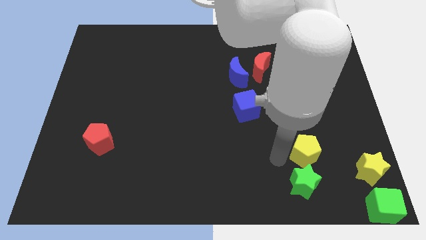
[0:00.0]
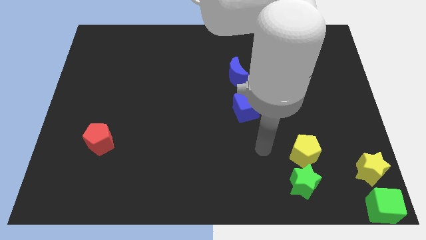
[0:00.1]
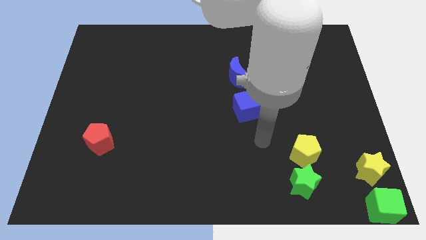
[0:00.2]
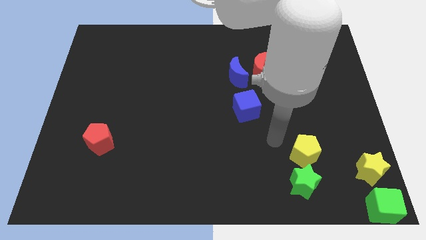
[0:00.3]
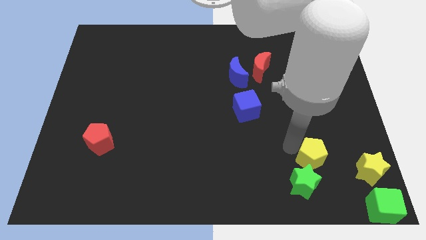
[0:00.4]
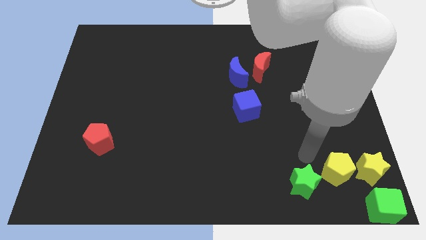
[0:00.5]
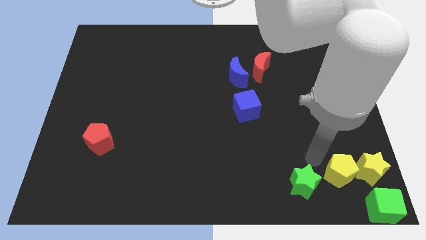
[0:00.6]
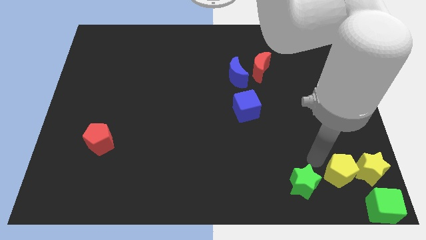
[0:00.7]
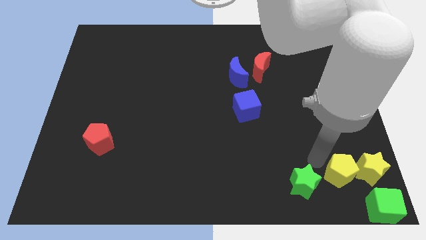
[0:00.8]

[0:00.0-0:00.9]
place the yellow pentagon towards the left side of the board

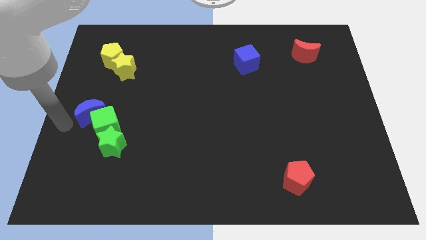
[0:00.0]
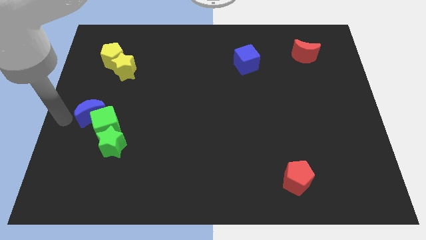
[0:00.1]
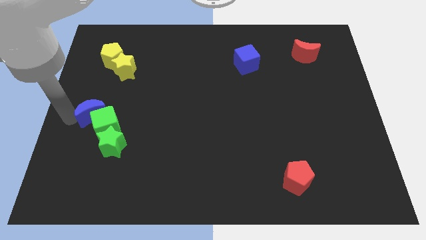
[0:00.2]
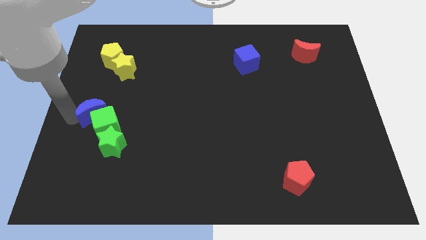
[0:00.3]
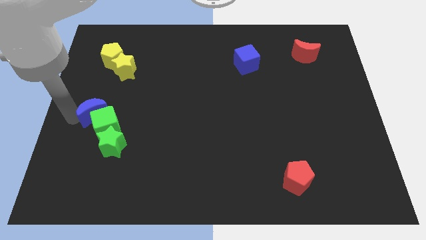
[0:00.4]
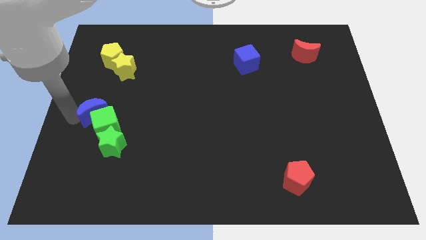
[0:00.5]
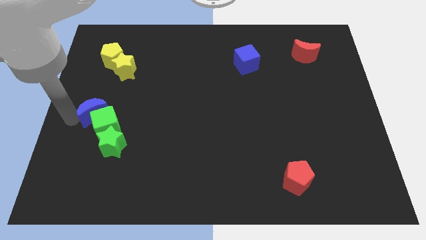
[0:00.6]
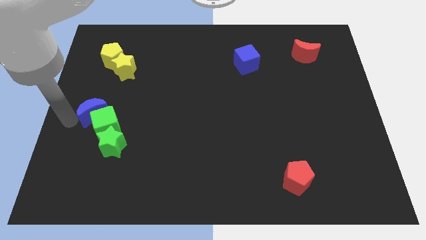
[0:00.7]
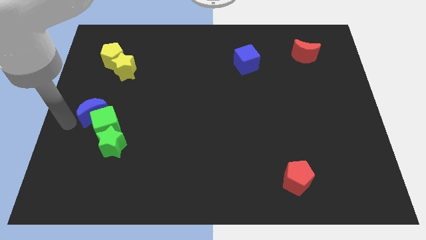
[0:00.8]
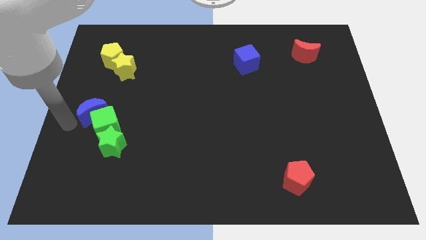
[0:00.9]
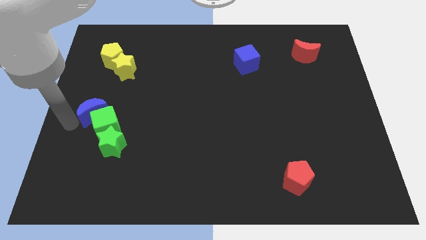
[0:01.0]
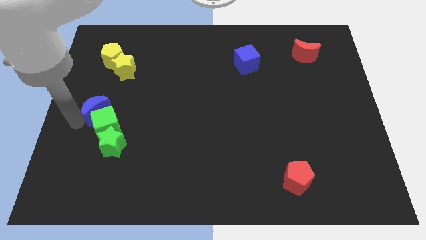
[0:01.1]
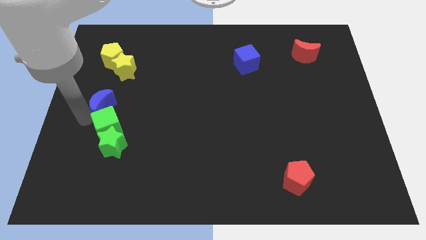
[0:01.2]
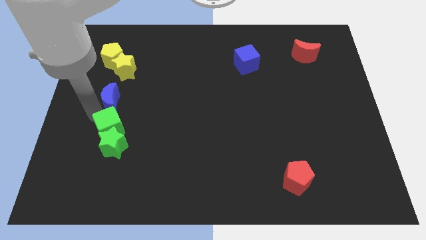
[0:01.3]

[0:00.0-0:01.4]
place blue moon to the top of the green cube

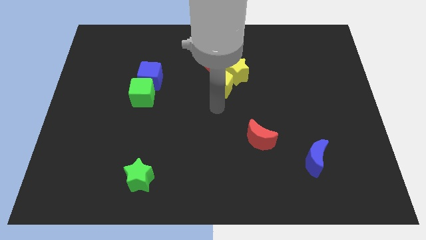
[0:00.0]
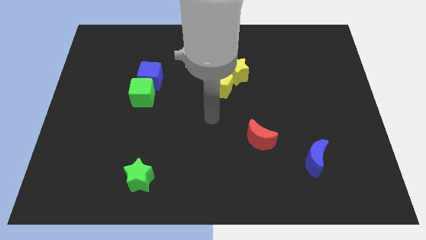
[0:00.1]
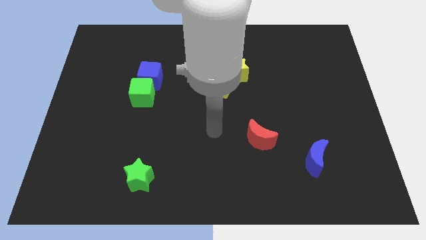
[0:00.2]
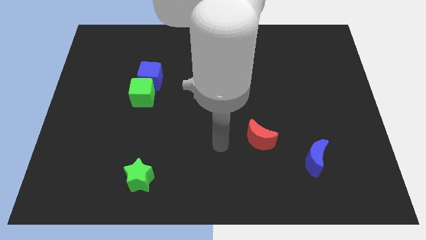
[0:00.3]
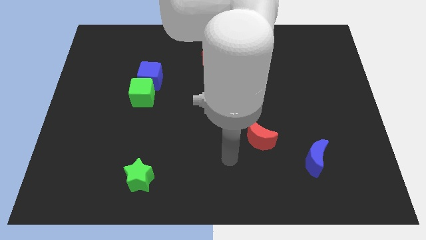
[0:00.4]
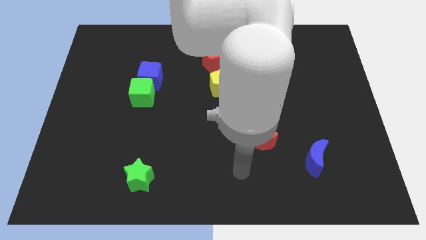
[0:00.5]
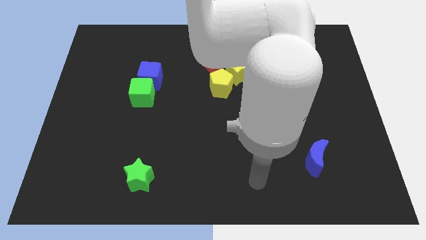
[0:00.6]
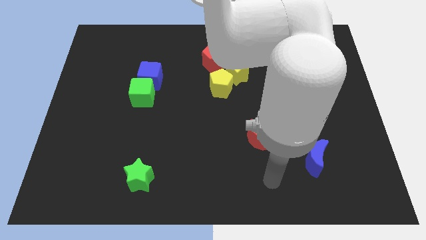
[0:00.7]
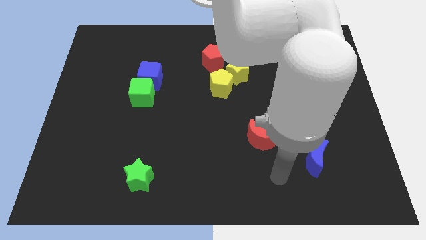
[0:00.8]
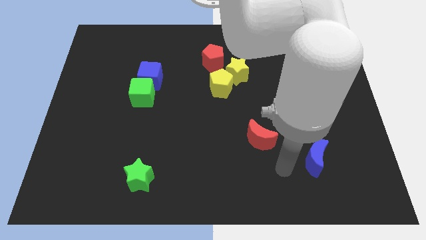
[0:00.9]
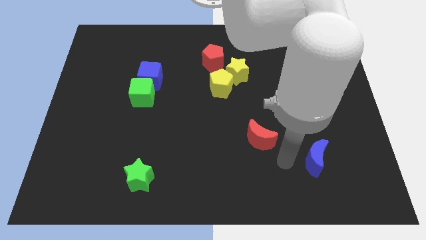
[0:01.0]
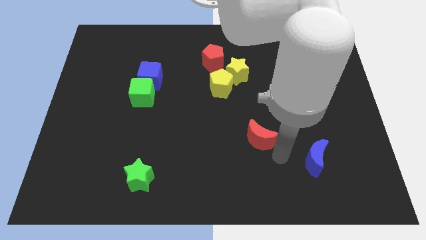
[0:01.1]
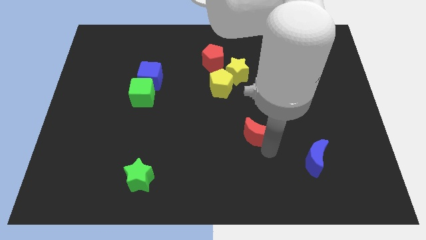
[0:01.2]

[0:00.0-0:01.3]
move your arm away from the yellow pentagon

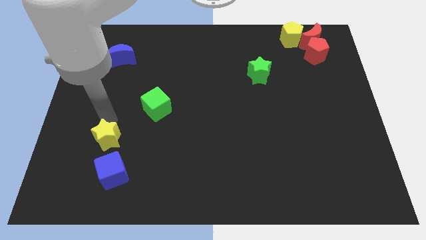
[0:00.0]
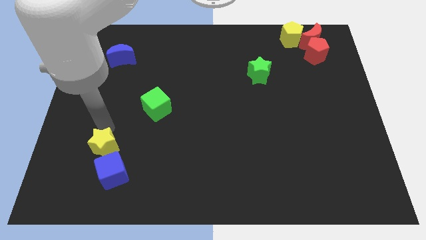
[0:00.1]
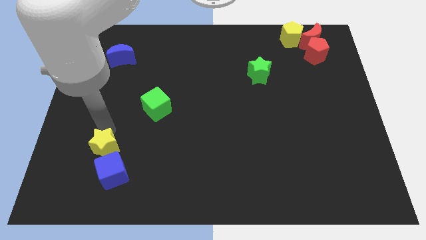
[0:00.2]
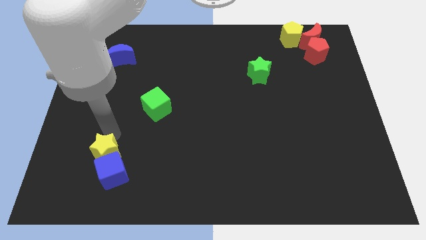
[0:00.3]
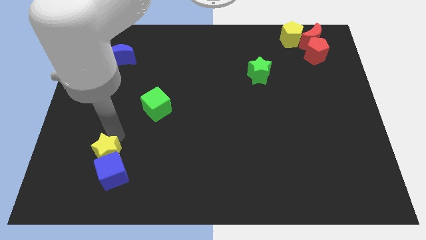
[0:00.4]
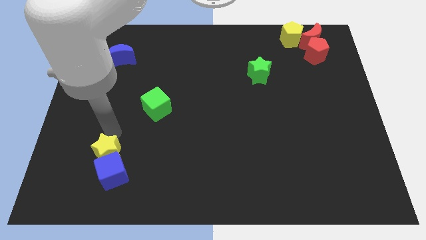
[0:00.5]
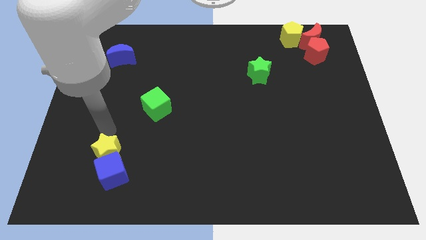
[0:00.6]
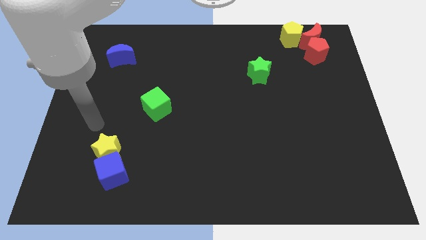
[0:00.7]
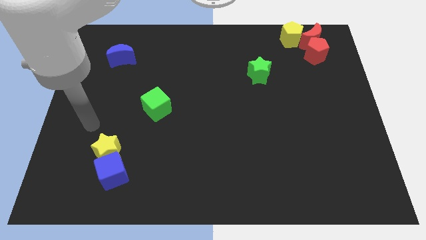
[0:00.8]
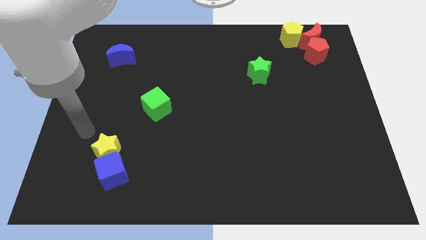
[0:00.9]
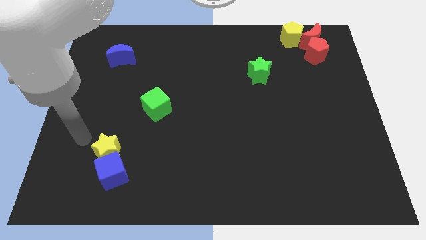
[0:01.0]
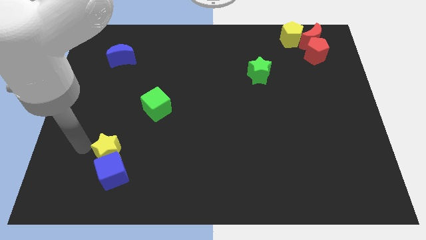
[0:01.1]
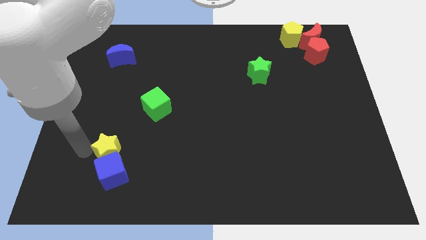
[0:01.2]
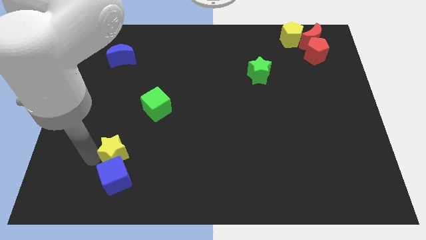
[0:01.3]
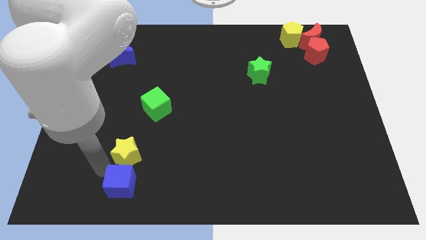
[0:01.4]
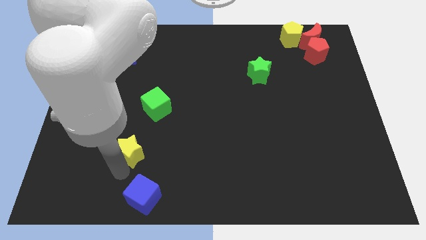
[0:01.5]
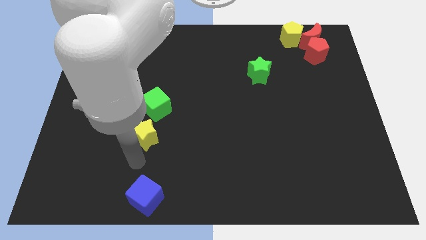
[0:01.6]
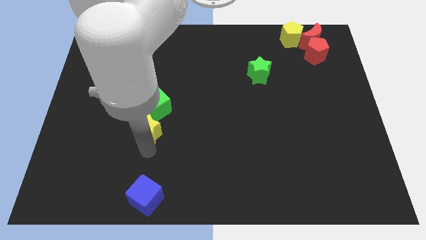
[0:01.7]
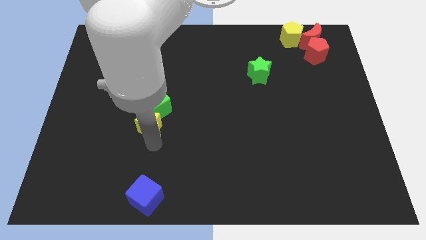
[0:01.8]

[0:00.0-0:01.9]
place yellow star below green cube

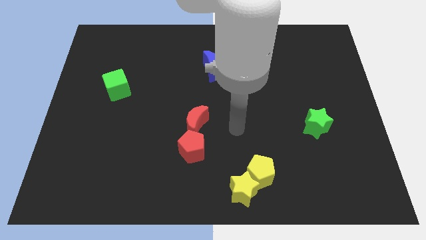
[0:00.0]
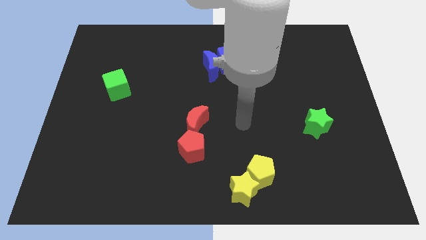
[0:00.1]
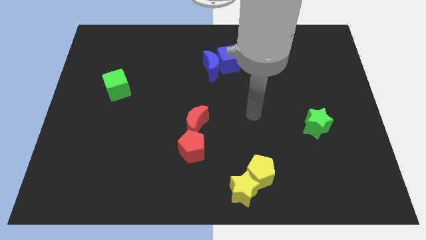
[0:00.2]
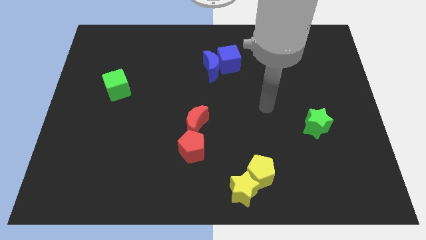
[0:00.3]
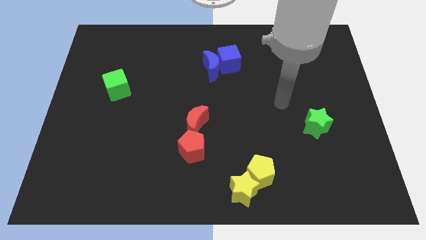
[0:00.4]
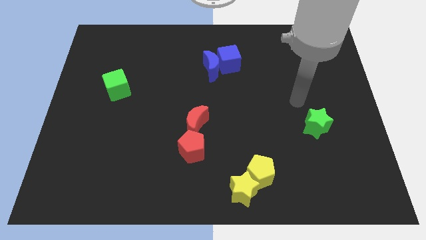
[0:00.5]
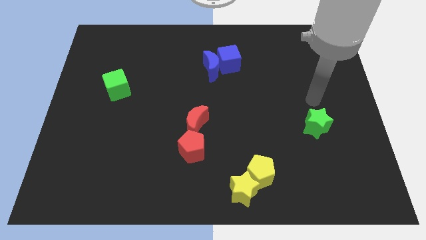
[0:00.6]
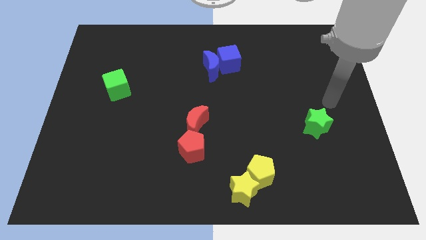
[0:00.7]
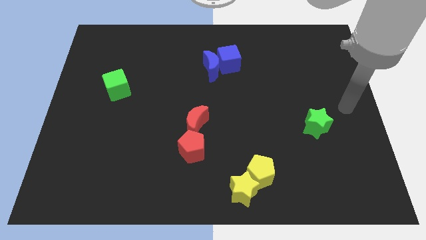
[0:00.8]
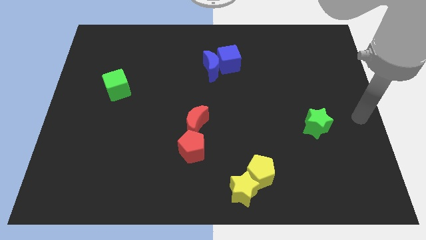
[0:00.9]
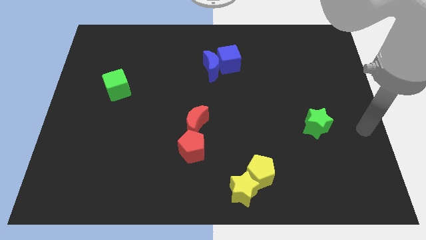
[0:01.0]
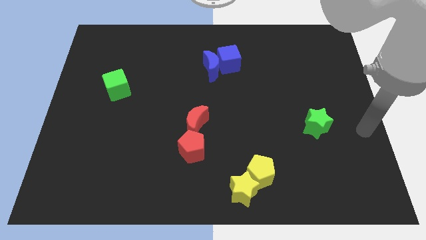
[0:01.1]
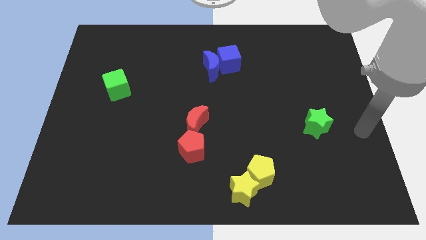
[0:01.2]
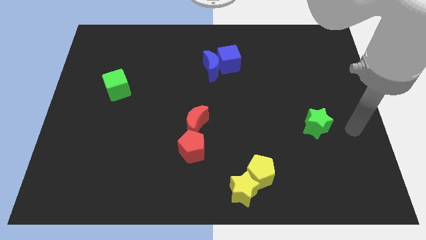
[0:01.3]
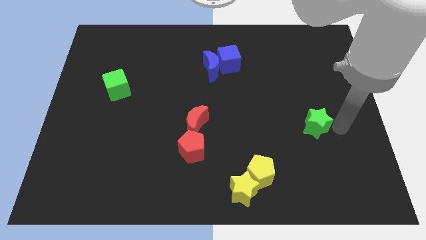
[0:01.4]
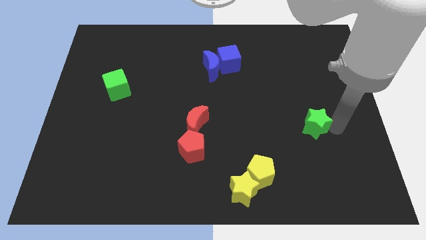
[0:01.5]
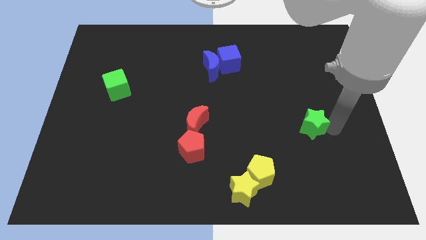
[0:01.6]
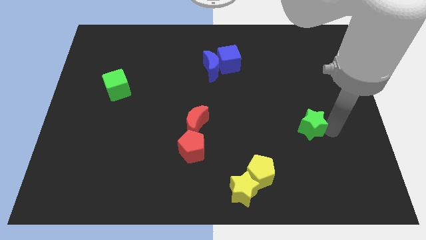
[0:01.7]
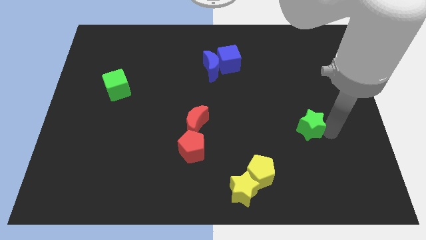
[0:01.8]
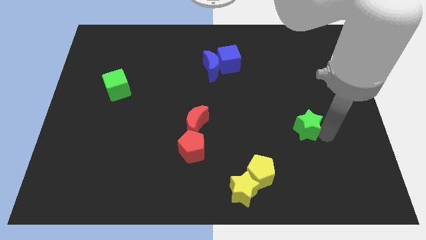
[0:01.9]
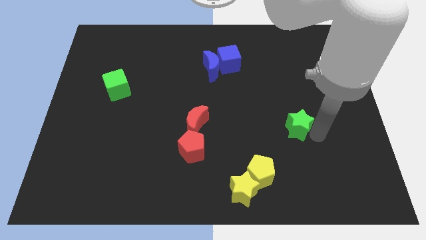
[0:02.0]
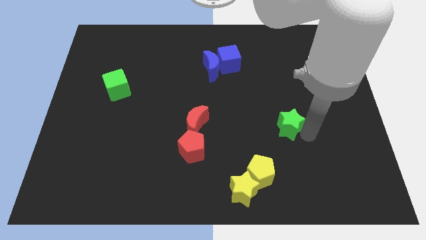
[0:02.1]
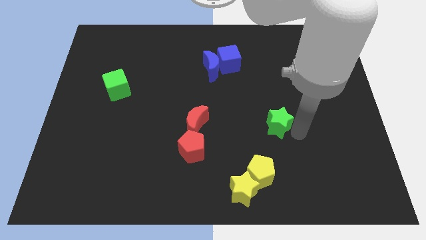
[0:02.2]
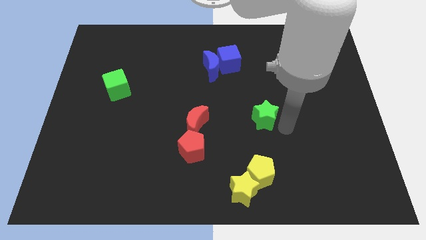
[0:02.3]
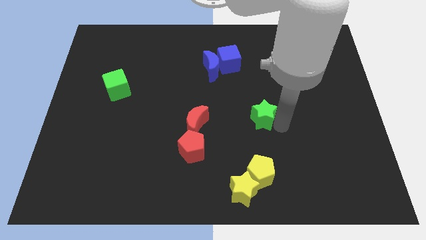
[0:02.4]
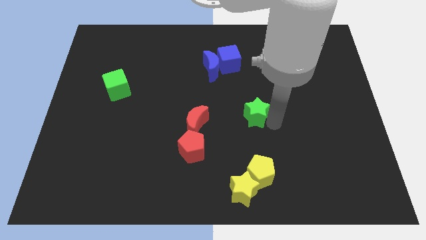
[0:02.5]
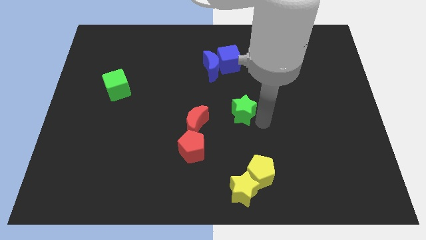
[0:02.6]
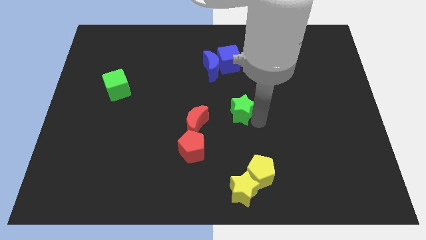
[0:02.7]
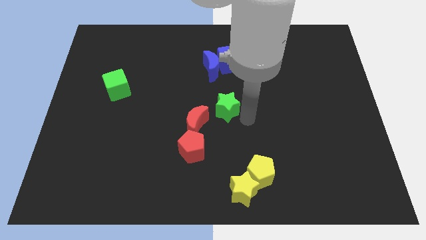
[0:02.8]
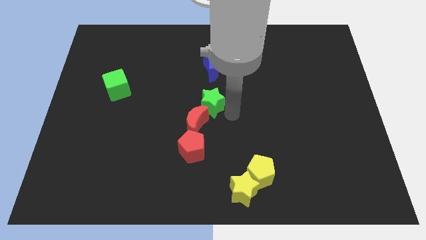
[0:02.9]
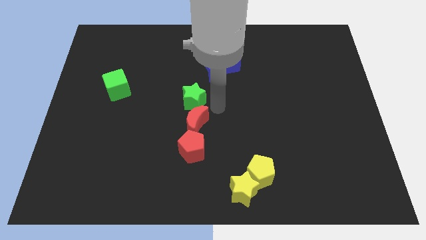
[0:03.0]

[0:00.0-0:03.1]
push the green star at the top side of the red moon

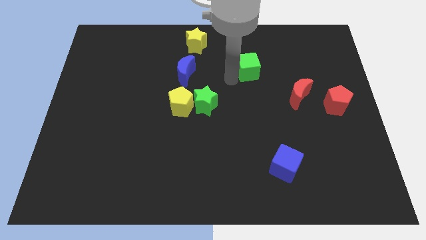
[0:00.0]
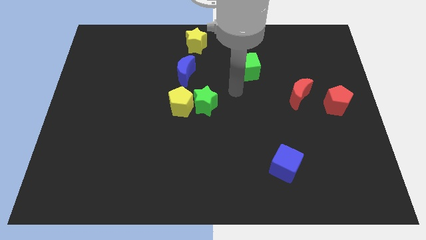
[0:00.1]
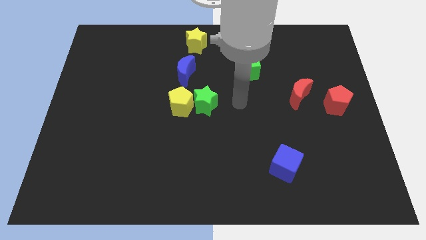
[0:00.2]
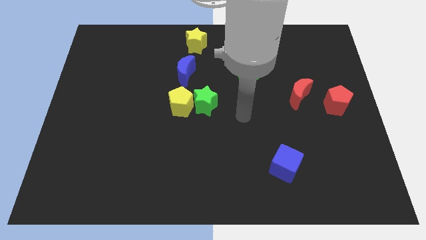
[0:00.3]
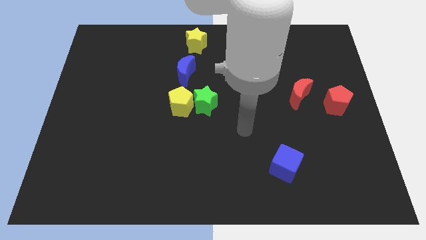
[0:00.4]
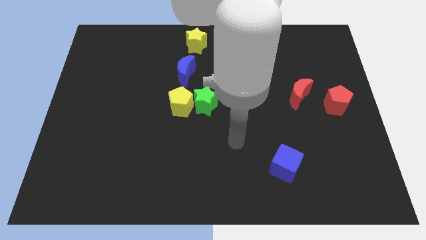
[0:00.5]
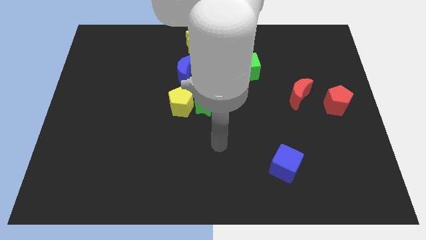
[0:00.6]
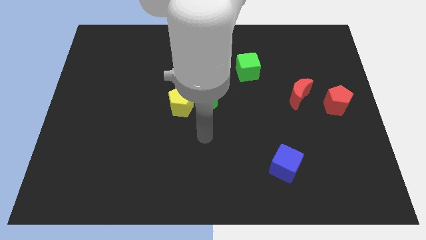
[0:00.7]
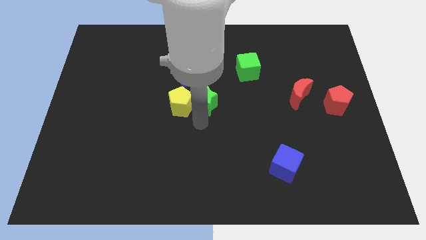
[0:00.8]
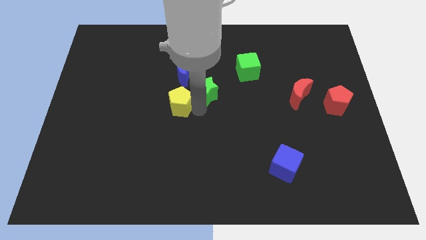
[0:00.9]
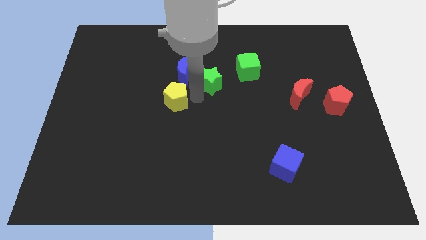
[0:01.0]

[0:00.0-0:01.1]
separate the green star from yellow pentagon
